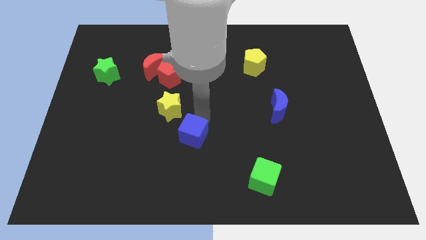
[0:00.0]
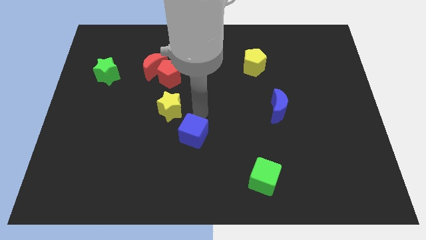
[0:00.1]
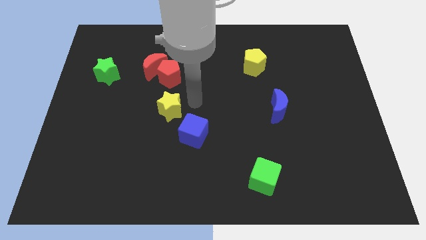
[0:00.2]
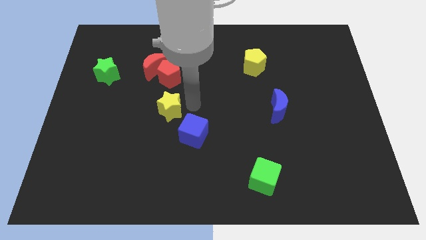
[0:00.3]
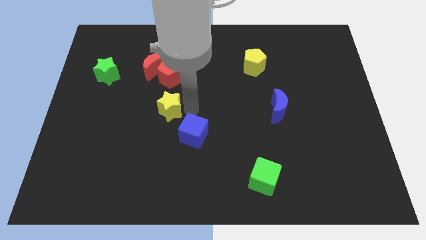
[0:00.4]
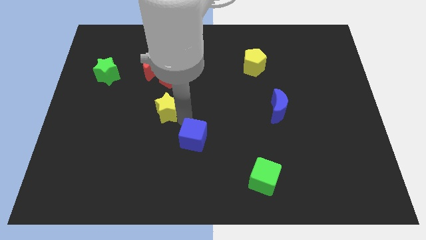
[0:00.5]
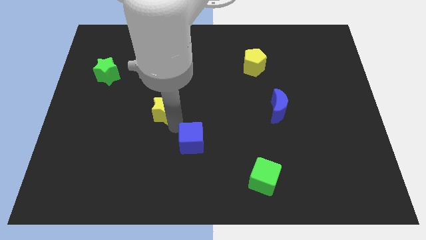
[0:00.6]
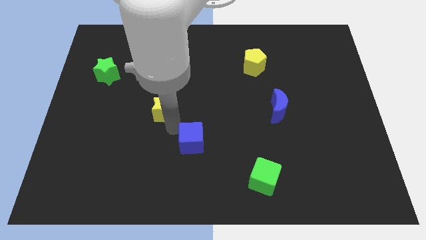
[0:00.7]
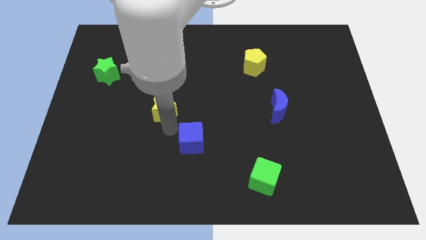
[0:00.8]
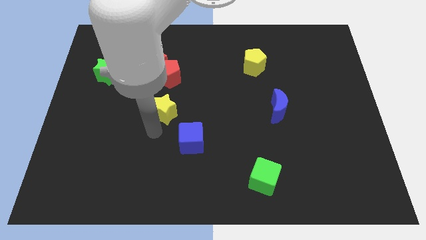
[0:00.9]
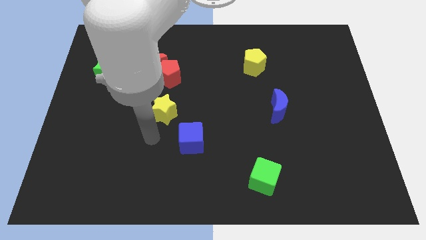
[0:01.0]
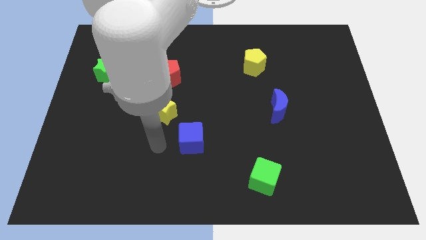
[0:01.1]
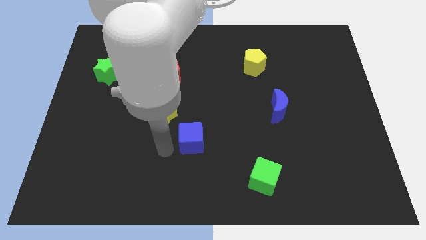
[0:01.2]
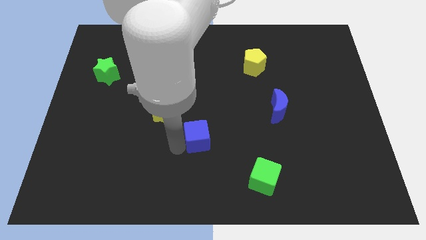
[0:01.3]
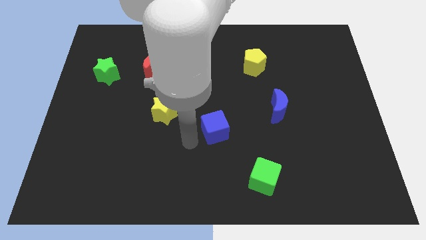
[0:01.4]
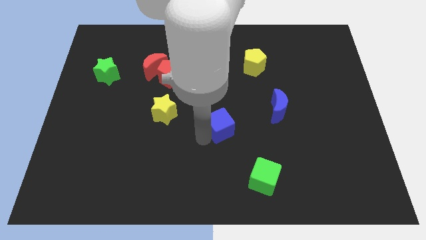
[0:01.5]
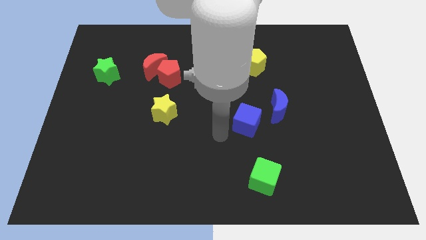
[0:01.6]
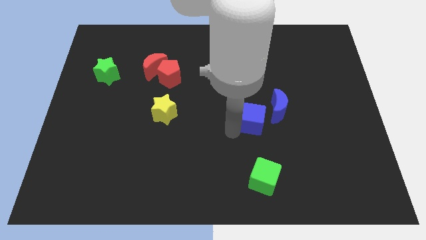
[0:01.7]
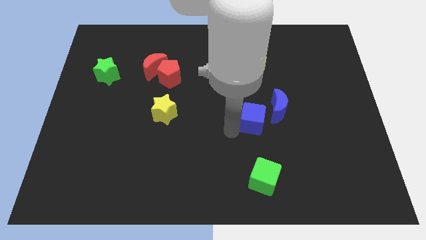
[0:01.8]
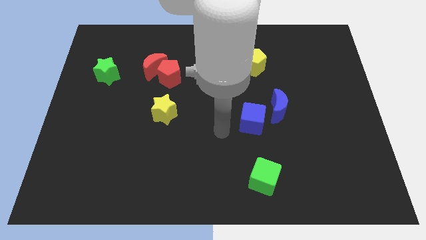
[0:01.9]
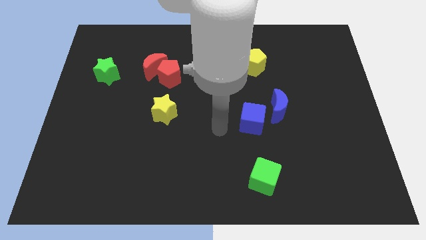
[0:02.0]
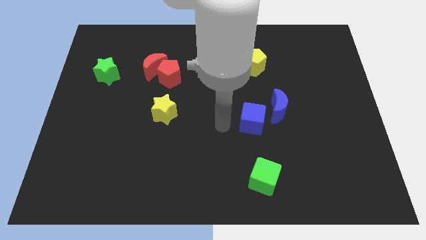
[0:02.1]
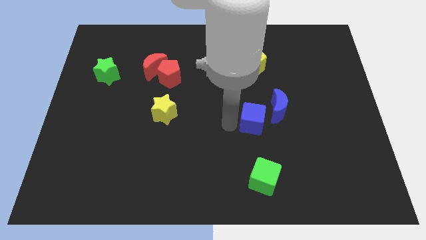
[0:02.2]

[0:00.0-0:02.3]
place the blue cube down to the yellow pentagon

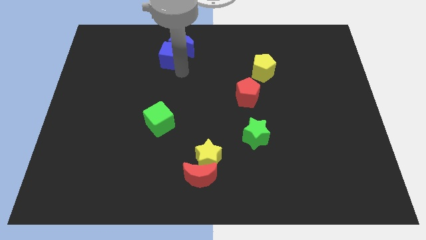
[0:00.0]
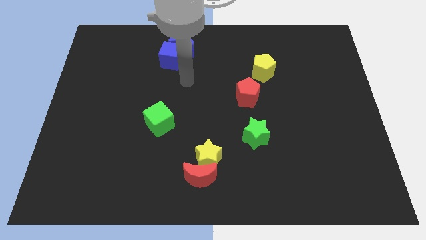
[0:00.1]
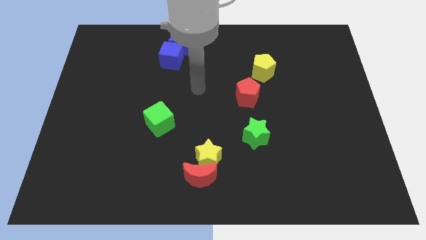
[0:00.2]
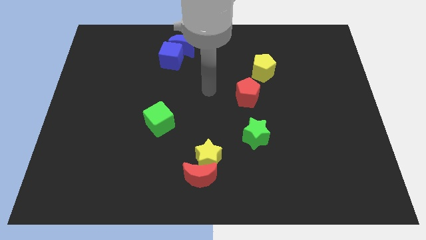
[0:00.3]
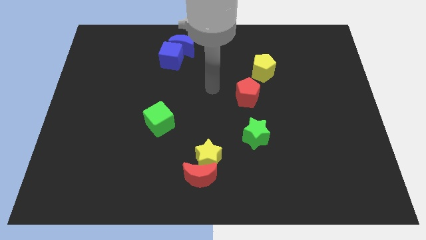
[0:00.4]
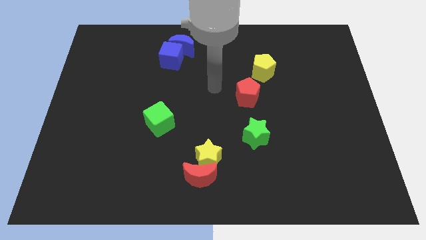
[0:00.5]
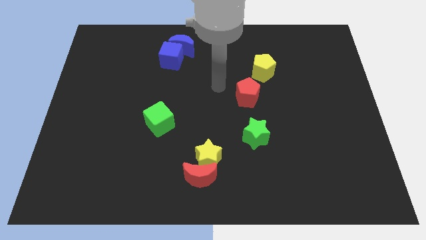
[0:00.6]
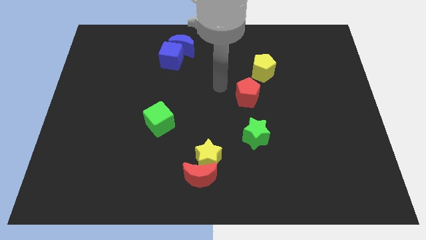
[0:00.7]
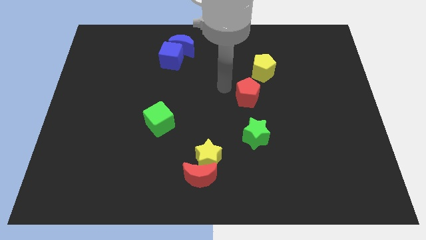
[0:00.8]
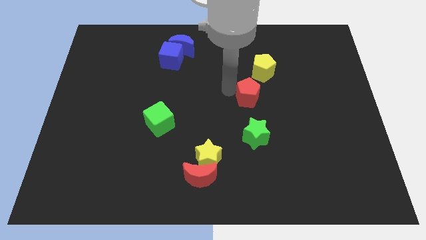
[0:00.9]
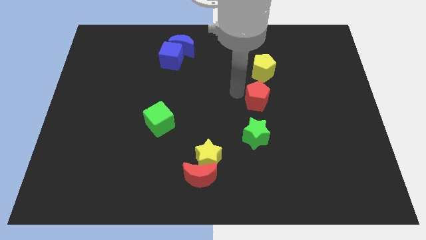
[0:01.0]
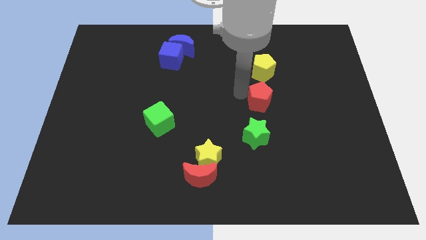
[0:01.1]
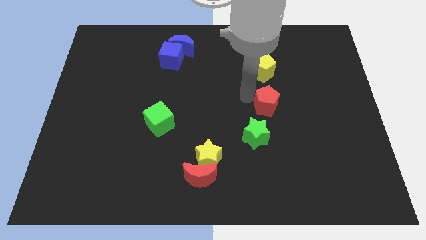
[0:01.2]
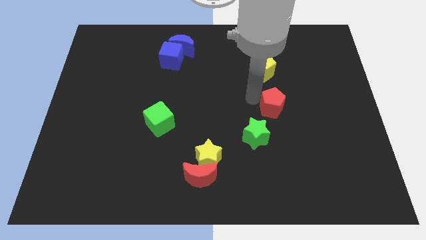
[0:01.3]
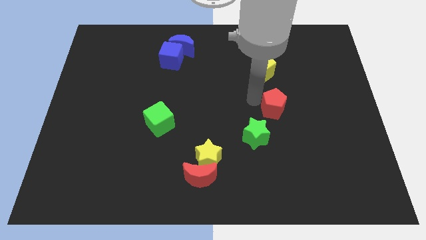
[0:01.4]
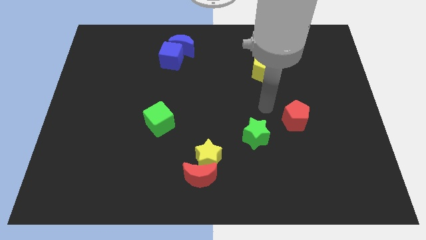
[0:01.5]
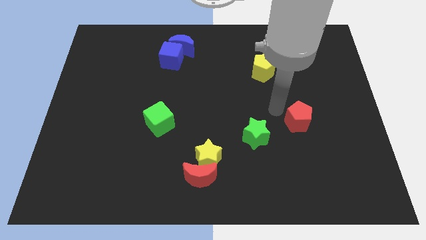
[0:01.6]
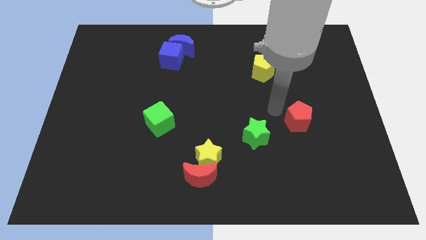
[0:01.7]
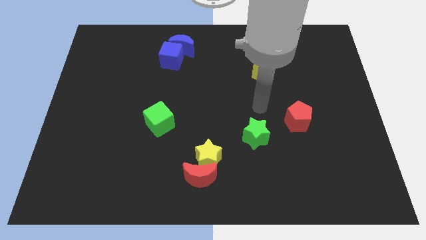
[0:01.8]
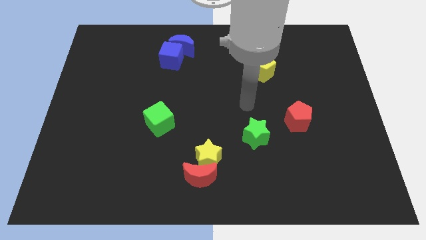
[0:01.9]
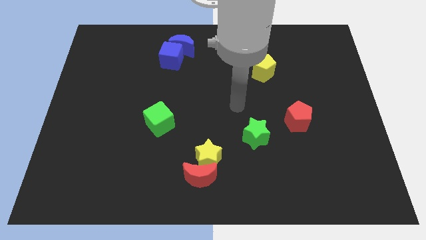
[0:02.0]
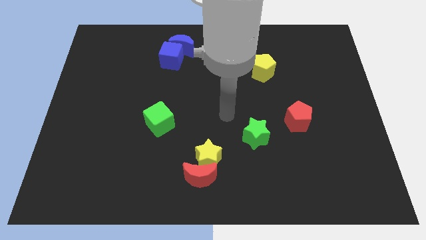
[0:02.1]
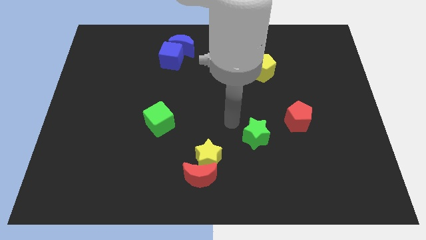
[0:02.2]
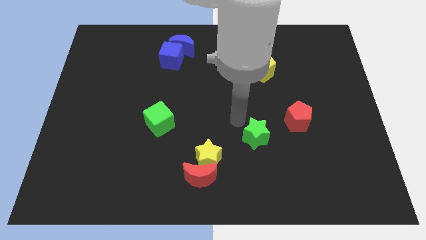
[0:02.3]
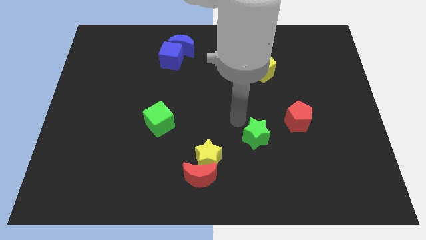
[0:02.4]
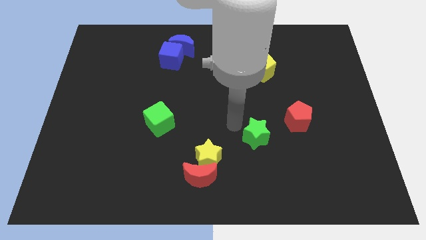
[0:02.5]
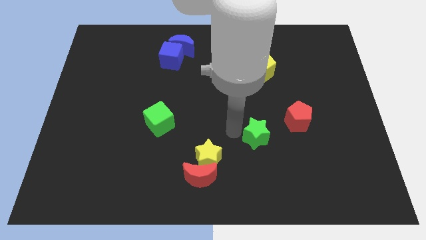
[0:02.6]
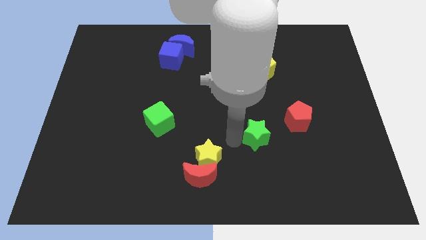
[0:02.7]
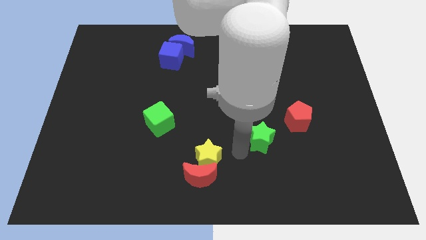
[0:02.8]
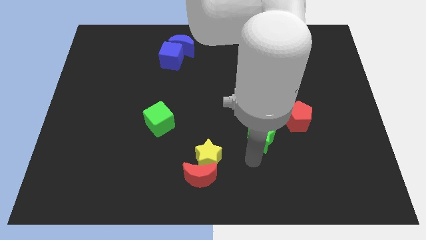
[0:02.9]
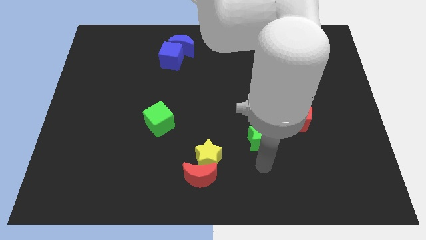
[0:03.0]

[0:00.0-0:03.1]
push the red pentagon slightly towards the right side of green cube

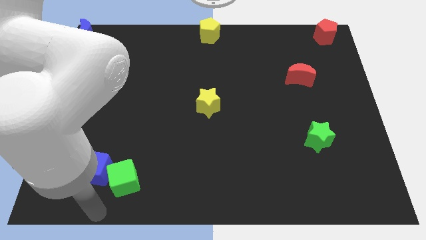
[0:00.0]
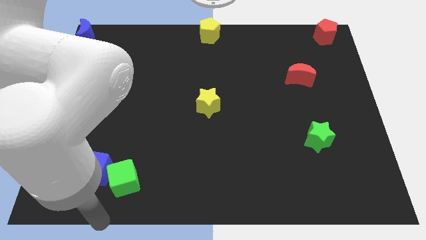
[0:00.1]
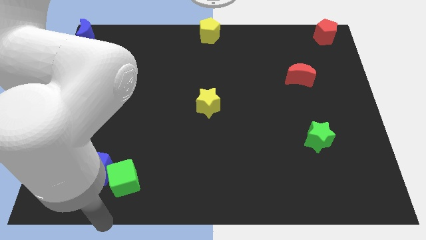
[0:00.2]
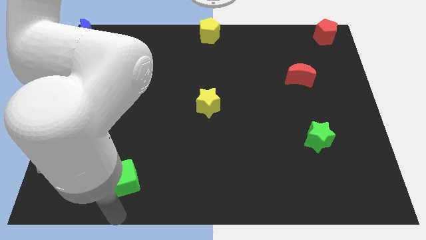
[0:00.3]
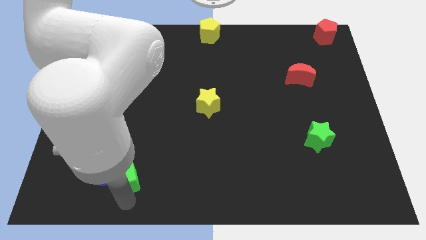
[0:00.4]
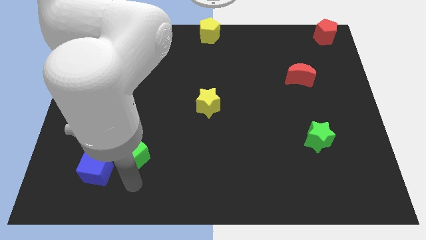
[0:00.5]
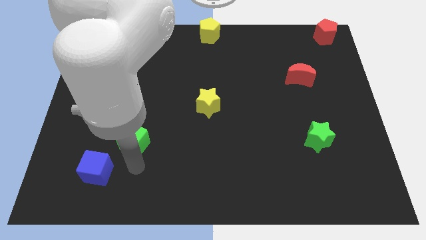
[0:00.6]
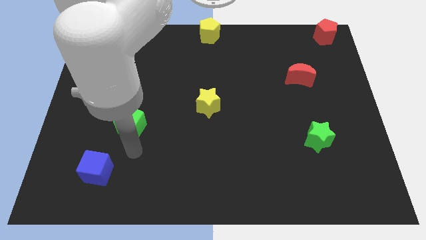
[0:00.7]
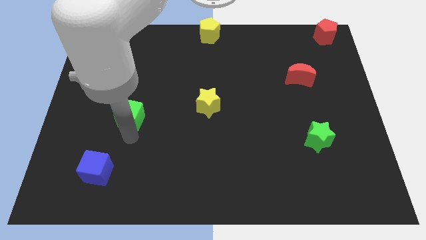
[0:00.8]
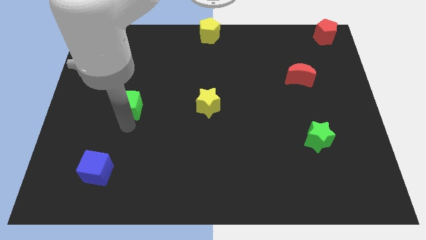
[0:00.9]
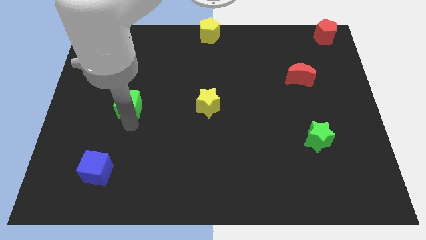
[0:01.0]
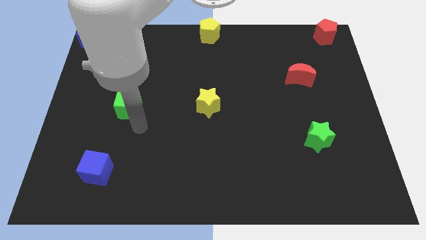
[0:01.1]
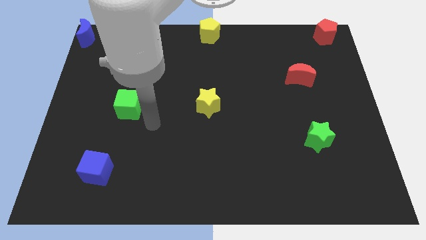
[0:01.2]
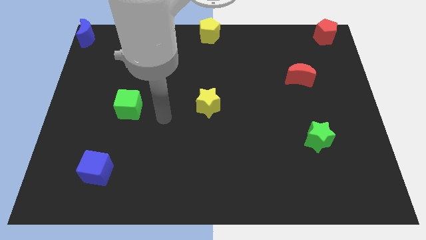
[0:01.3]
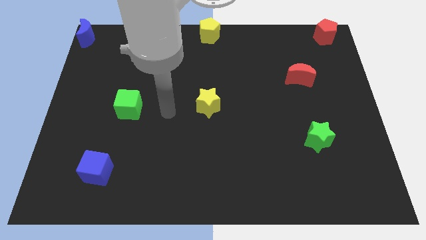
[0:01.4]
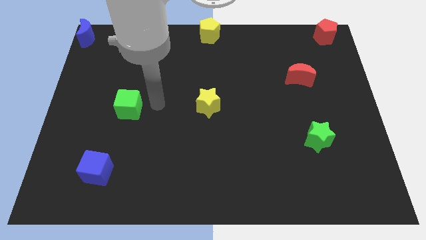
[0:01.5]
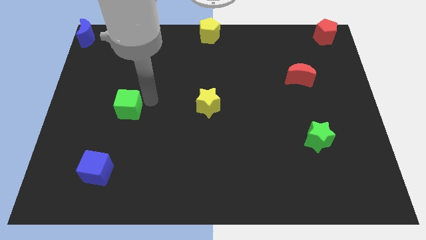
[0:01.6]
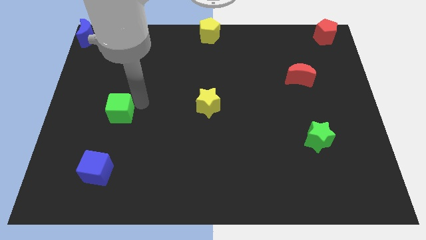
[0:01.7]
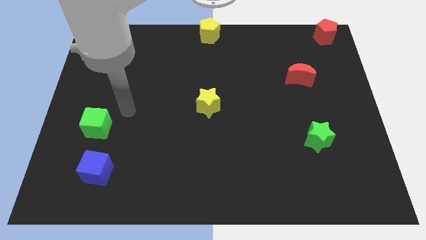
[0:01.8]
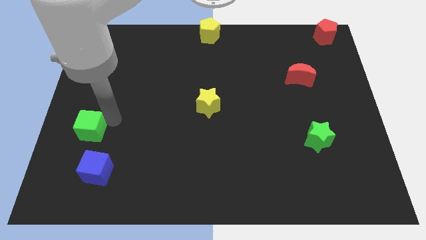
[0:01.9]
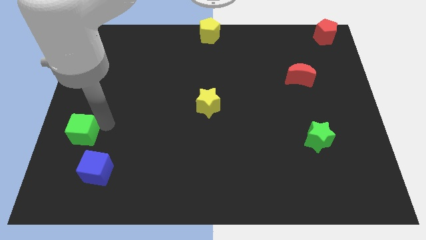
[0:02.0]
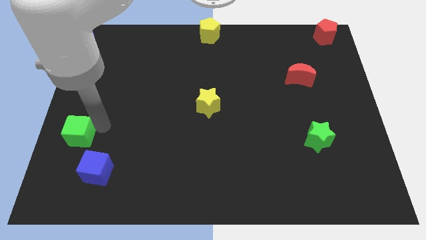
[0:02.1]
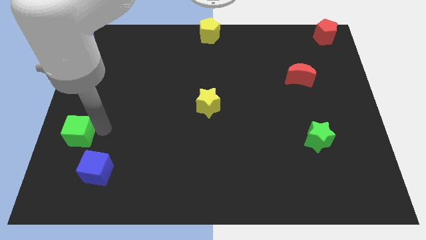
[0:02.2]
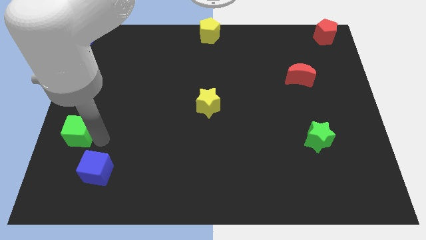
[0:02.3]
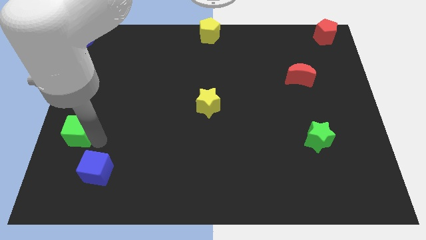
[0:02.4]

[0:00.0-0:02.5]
move the green cube towards the top left side of the blue block

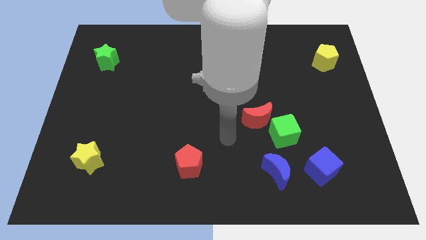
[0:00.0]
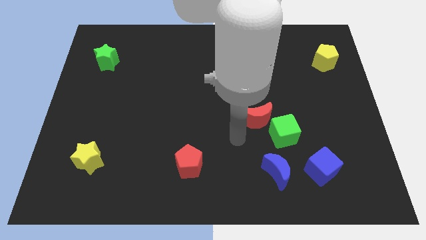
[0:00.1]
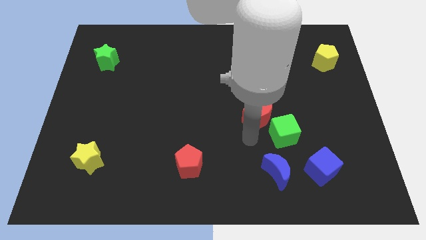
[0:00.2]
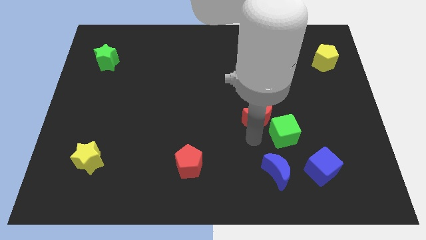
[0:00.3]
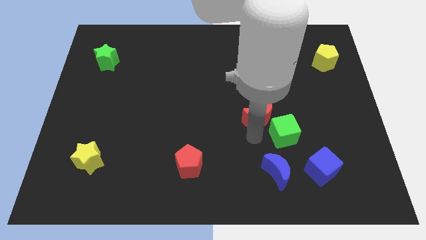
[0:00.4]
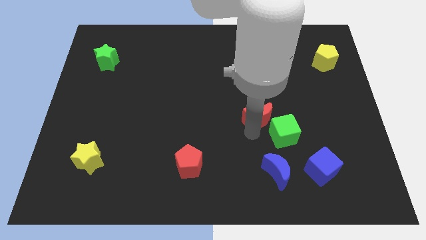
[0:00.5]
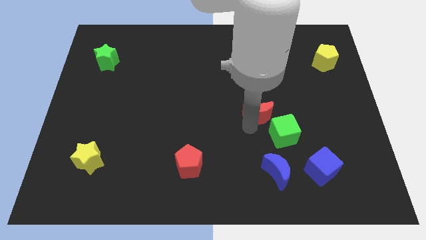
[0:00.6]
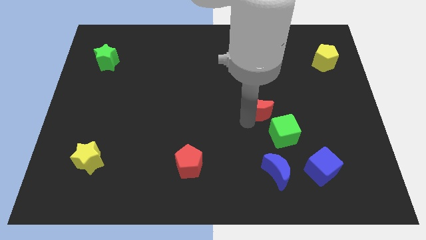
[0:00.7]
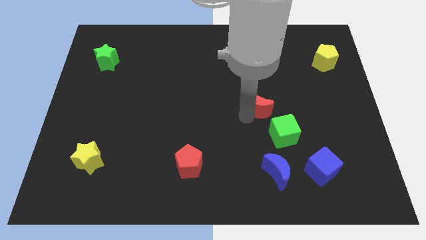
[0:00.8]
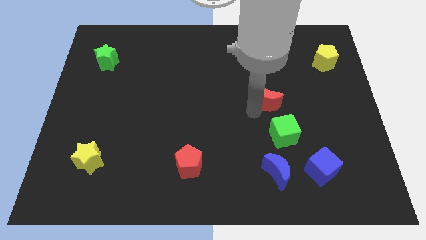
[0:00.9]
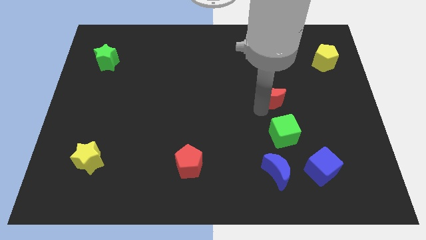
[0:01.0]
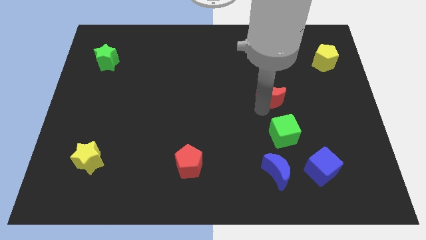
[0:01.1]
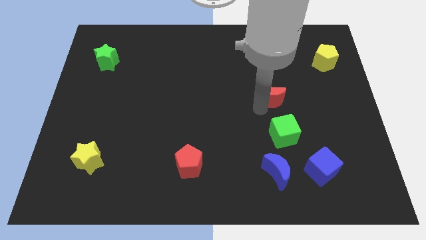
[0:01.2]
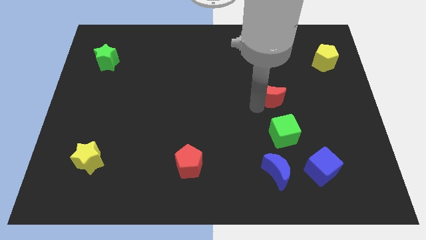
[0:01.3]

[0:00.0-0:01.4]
move the red moon slightly up
